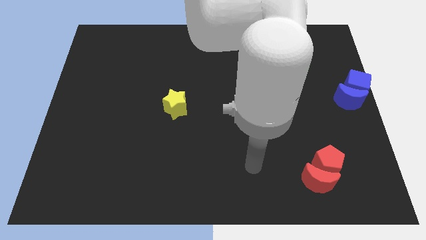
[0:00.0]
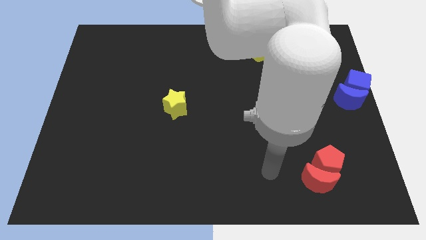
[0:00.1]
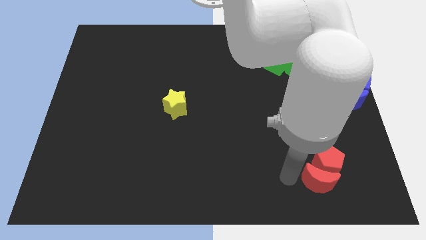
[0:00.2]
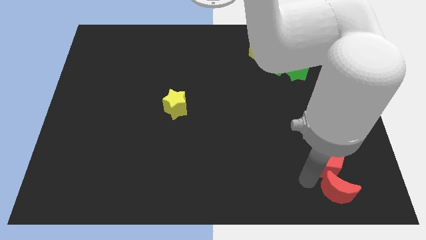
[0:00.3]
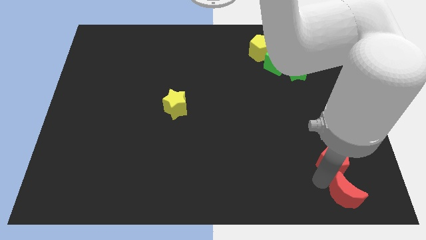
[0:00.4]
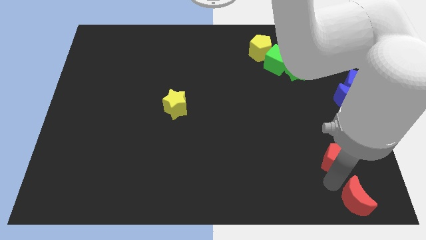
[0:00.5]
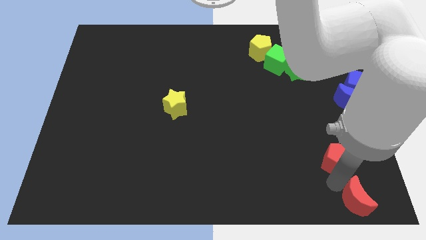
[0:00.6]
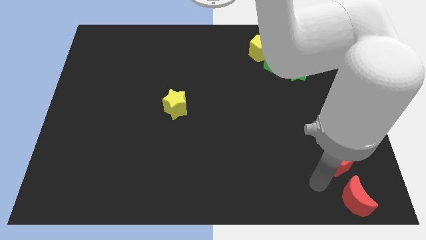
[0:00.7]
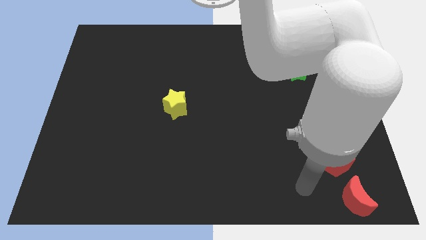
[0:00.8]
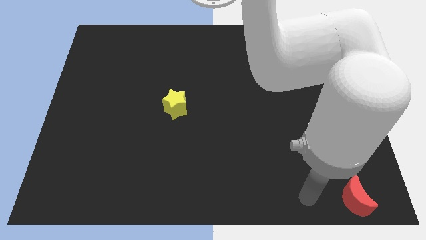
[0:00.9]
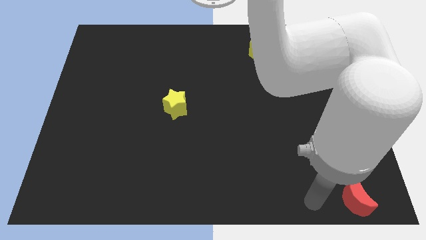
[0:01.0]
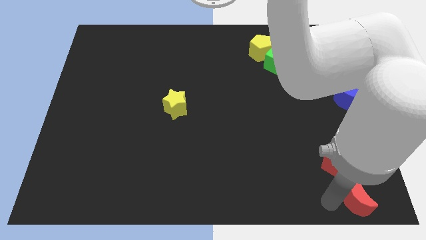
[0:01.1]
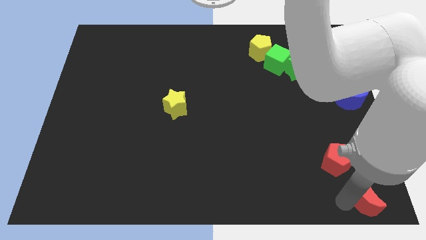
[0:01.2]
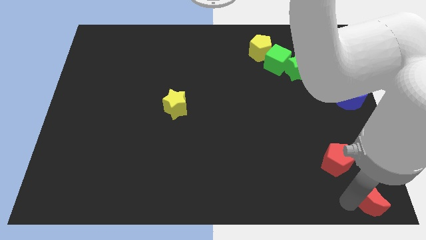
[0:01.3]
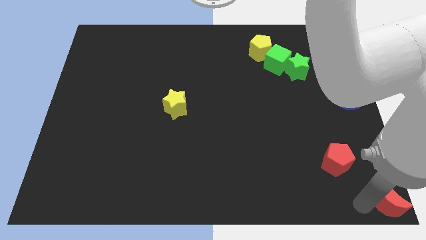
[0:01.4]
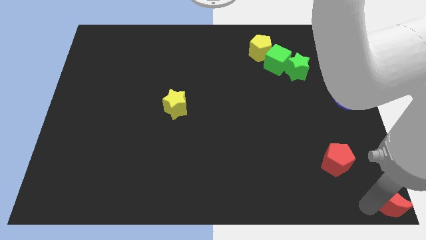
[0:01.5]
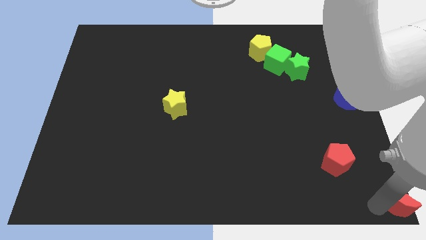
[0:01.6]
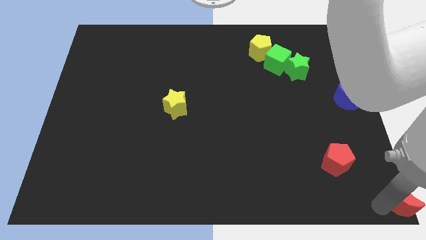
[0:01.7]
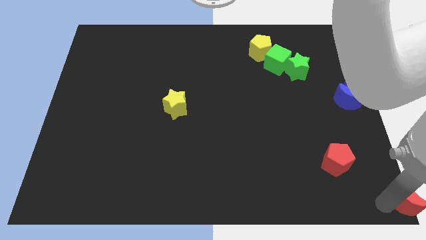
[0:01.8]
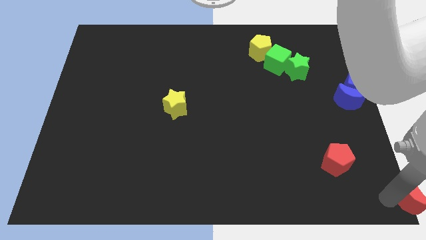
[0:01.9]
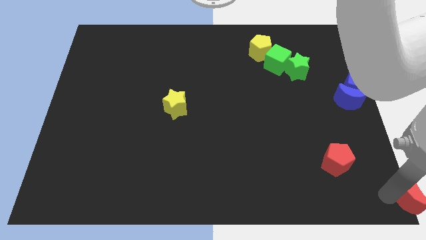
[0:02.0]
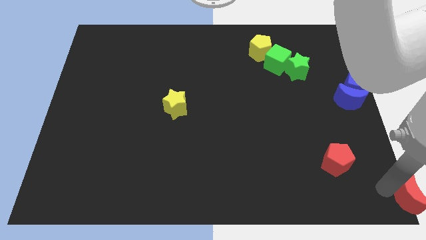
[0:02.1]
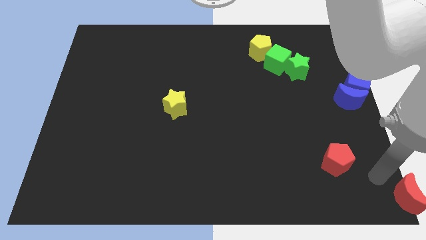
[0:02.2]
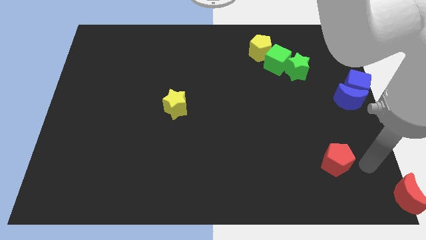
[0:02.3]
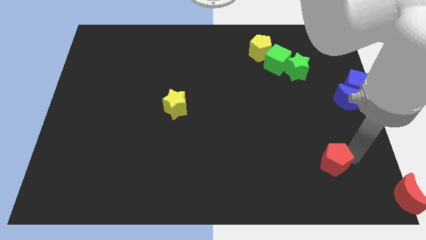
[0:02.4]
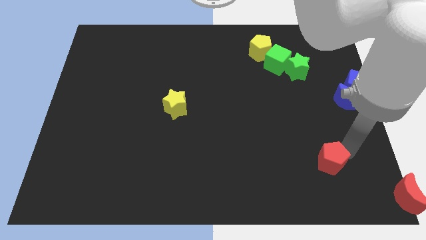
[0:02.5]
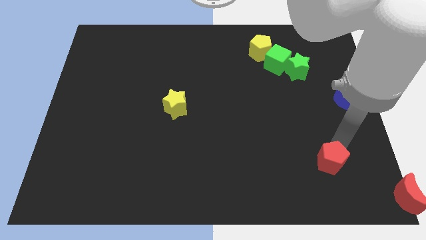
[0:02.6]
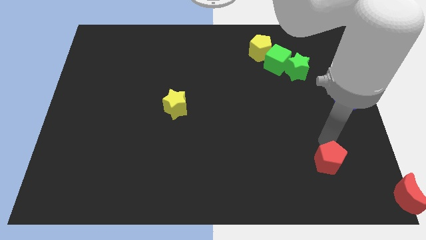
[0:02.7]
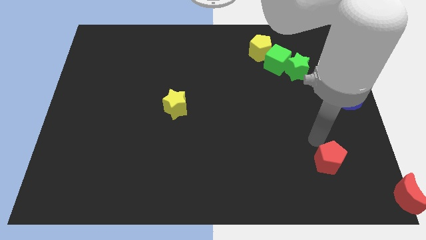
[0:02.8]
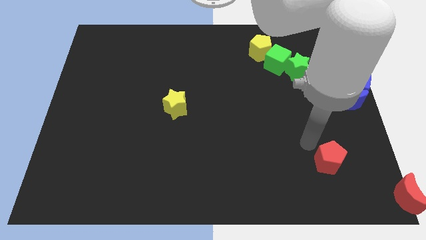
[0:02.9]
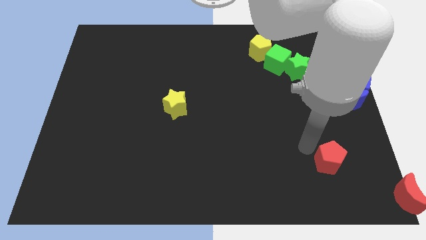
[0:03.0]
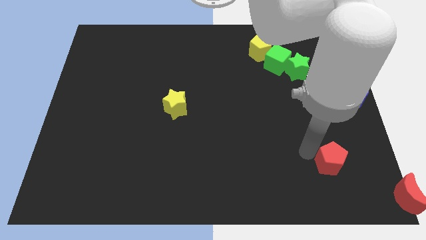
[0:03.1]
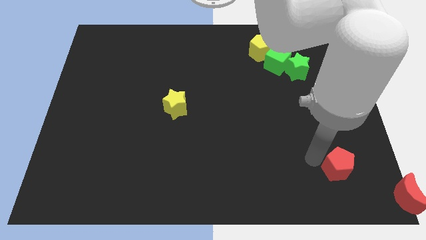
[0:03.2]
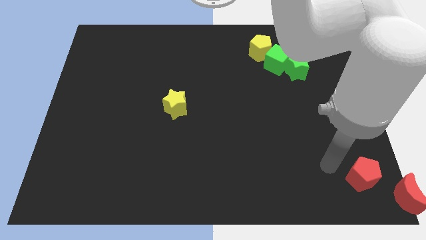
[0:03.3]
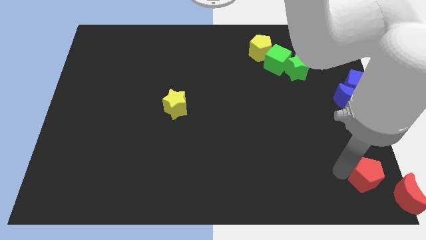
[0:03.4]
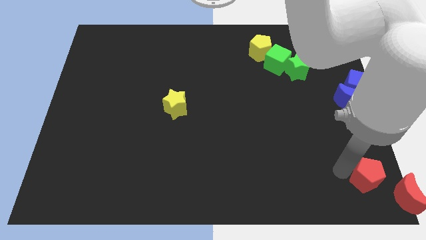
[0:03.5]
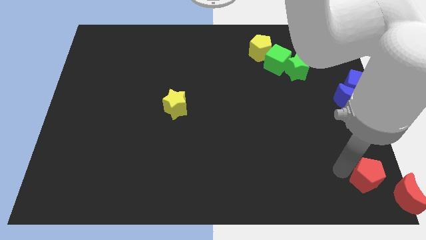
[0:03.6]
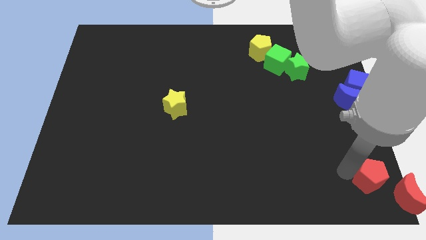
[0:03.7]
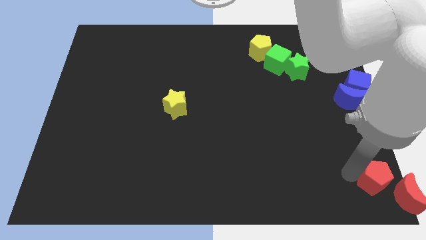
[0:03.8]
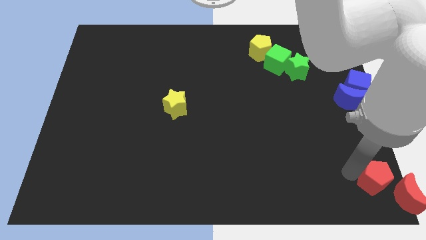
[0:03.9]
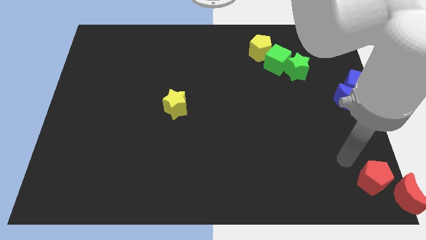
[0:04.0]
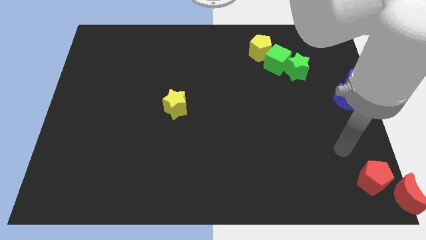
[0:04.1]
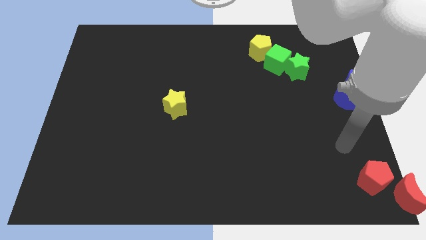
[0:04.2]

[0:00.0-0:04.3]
move the red crescent to the bottom right side of the board

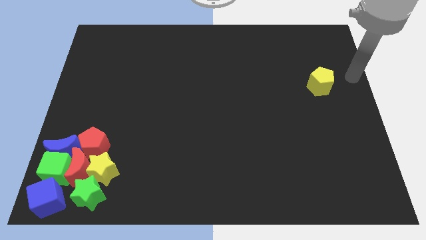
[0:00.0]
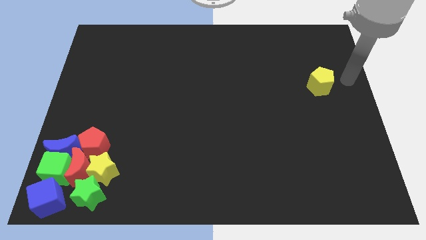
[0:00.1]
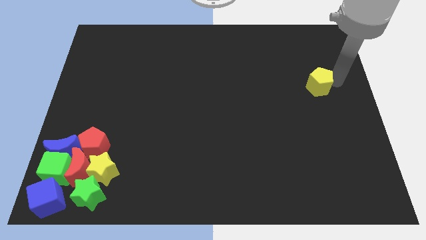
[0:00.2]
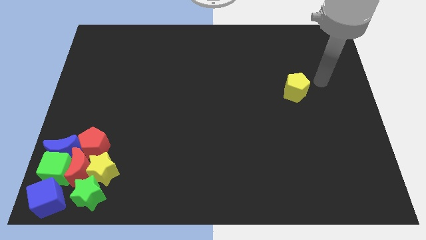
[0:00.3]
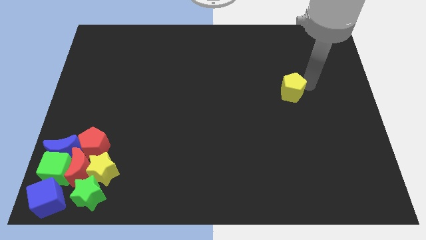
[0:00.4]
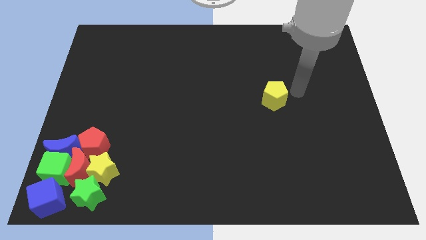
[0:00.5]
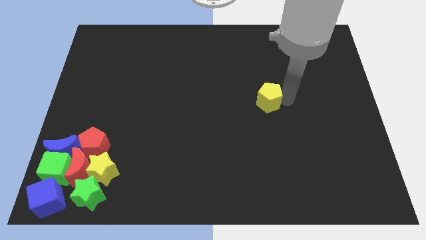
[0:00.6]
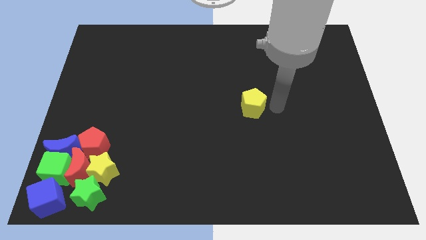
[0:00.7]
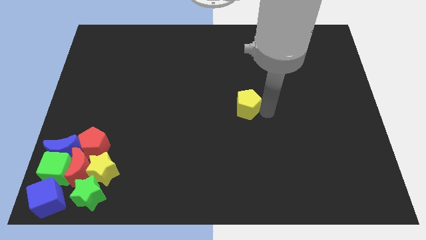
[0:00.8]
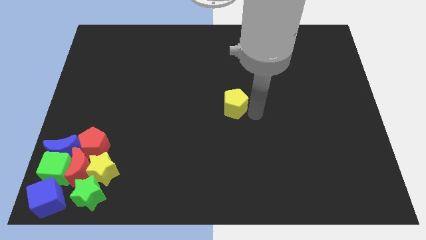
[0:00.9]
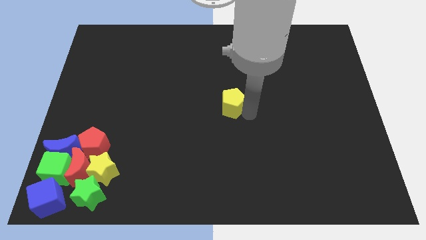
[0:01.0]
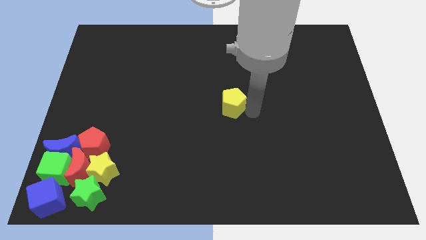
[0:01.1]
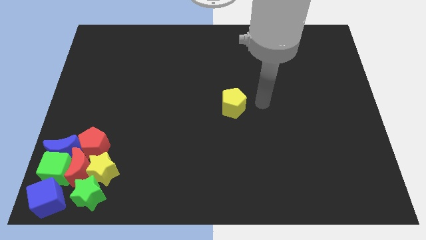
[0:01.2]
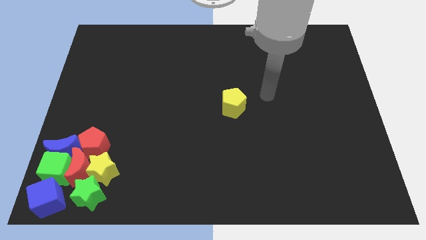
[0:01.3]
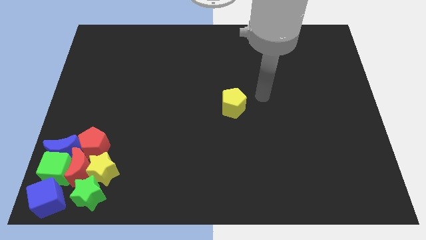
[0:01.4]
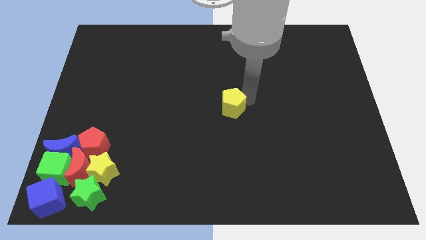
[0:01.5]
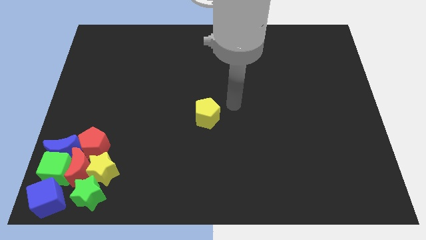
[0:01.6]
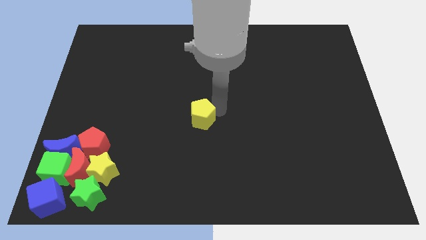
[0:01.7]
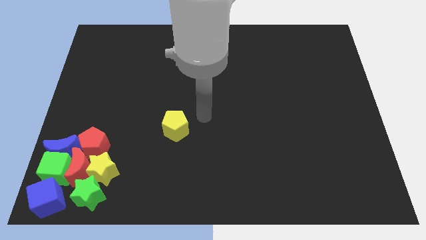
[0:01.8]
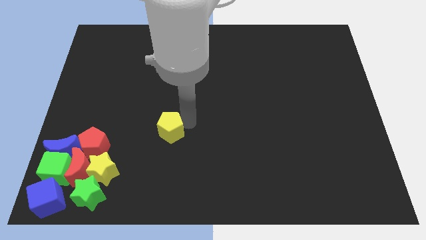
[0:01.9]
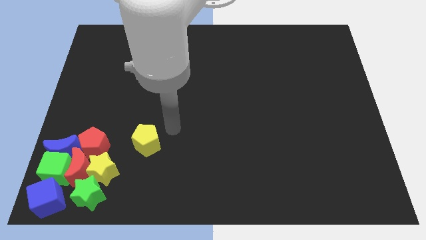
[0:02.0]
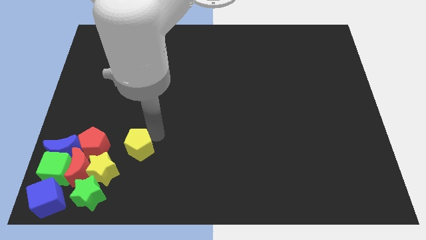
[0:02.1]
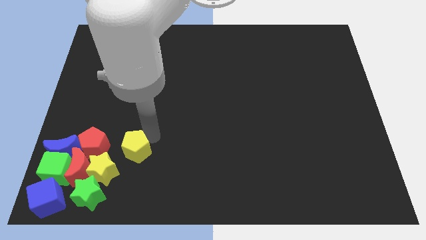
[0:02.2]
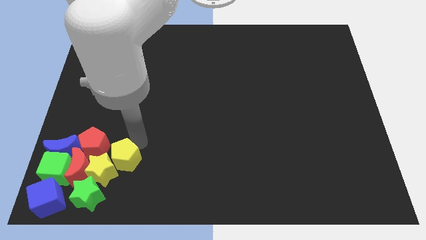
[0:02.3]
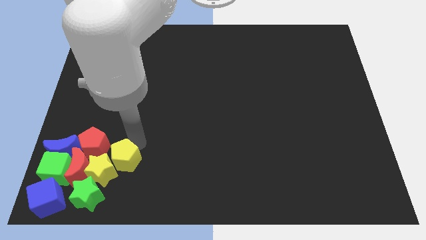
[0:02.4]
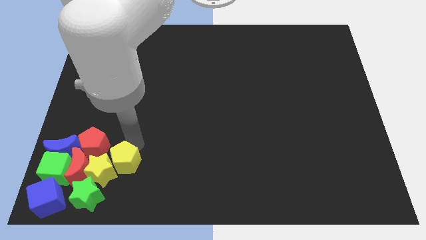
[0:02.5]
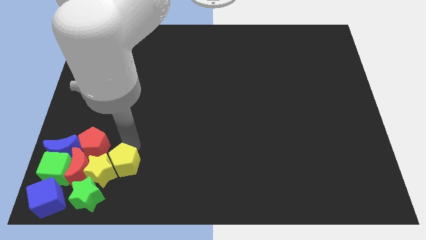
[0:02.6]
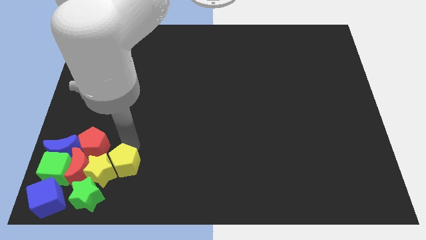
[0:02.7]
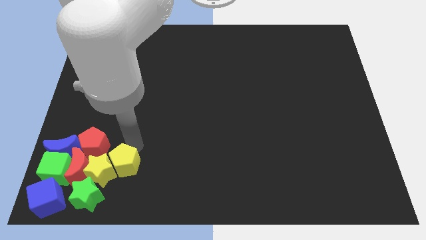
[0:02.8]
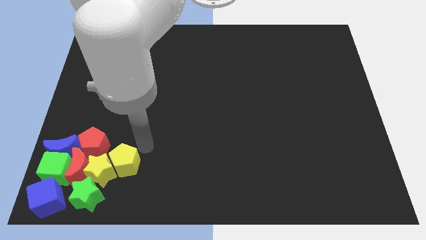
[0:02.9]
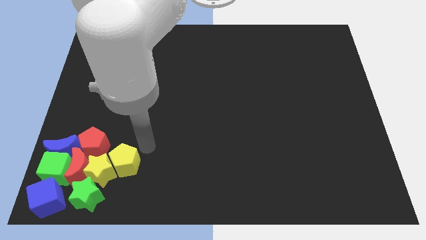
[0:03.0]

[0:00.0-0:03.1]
slide yellow pentagon into the yellow star from right

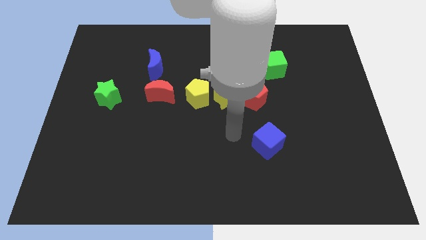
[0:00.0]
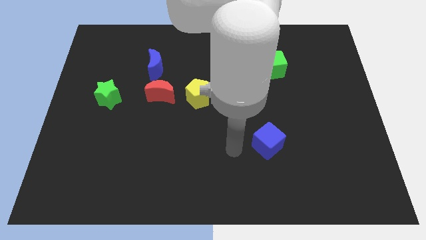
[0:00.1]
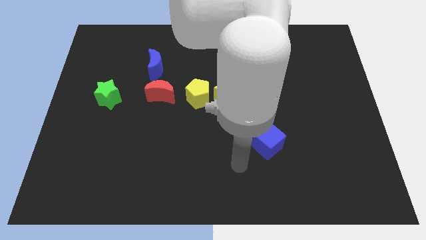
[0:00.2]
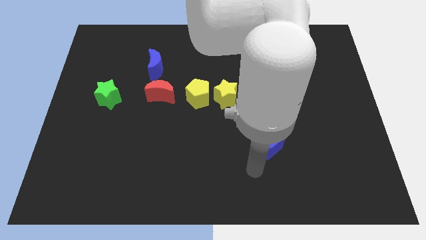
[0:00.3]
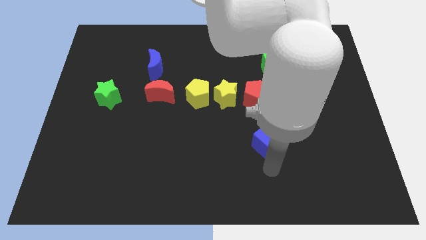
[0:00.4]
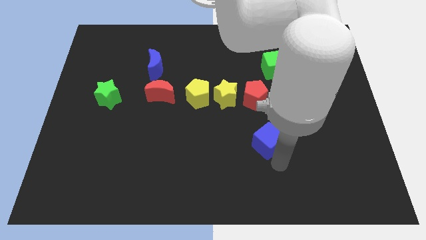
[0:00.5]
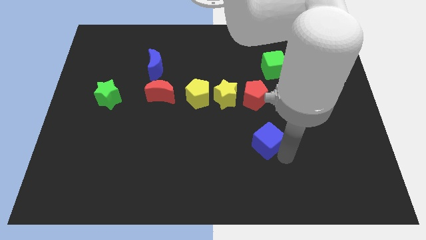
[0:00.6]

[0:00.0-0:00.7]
touch the bottom of blue cube

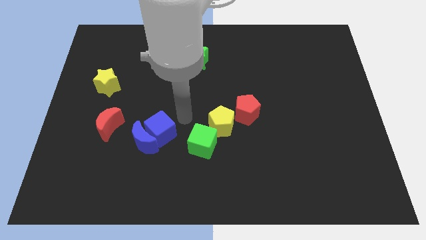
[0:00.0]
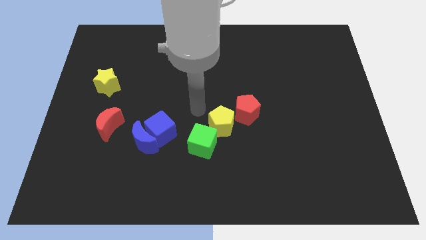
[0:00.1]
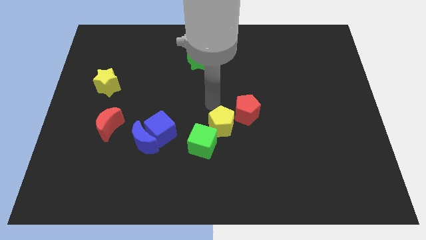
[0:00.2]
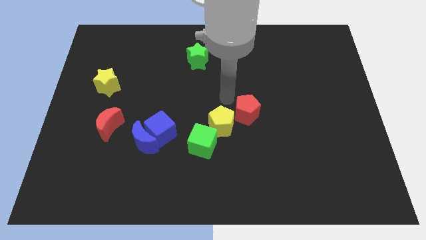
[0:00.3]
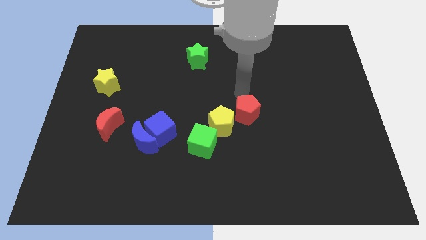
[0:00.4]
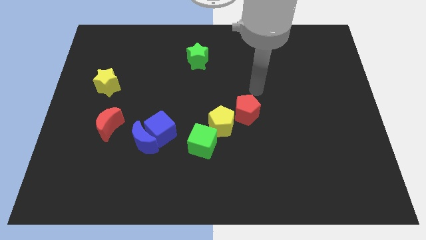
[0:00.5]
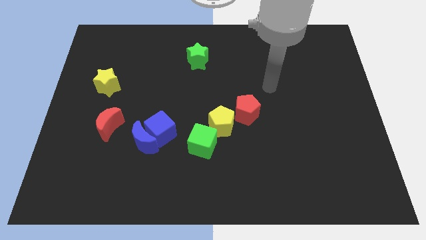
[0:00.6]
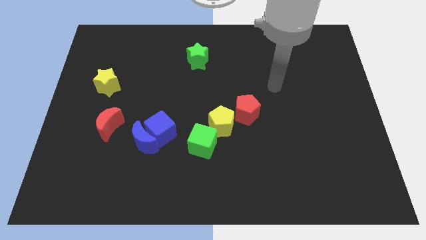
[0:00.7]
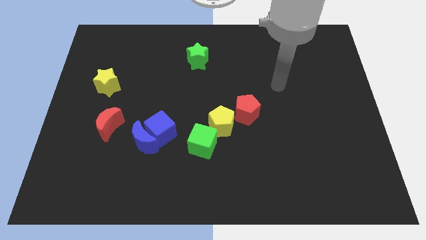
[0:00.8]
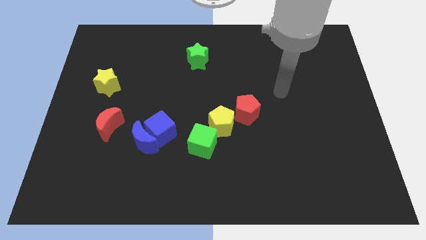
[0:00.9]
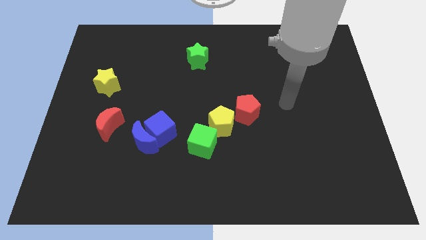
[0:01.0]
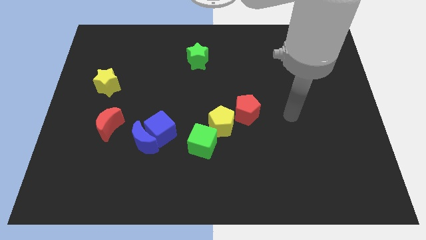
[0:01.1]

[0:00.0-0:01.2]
push the arm right side to the red pentagon
